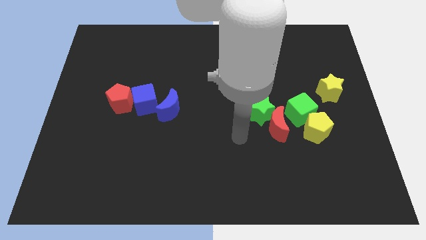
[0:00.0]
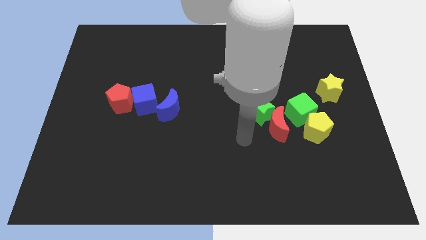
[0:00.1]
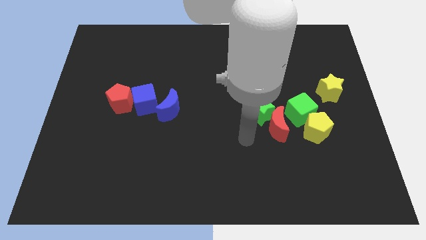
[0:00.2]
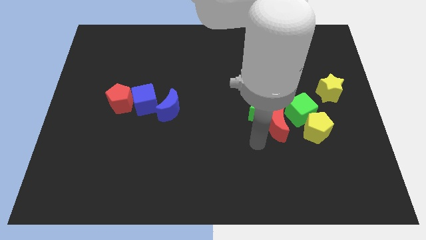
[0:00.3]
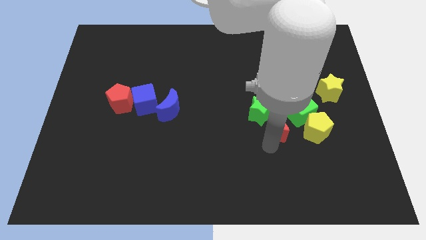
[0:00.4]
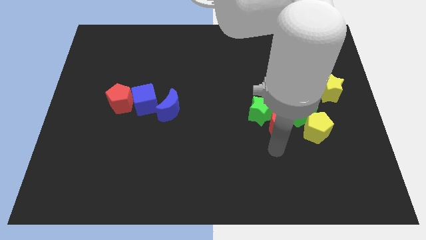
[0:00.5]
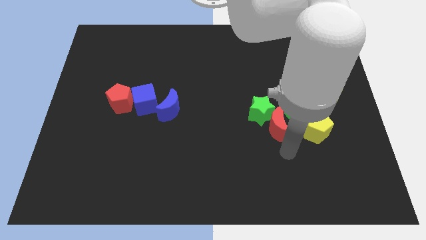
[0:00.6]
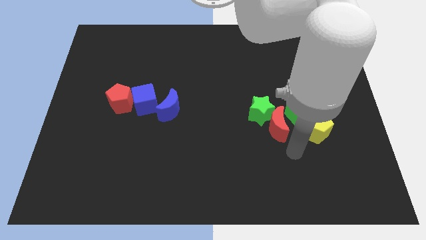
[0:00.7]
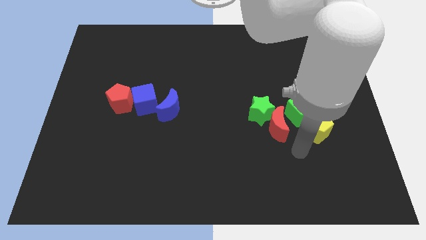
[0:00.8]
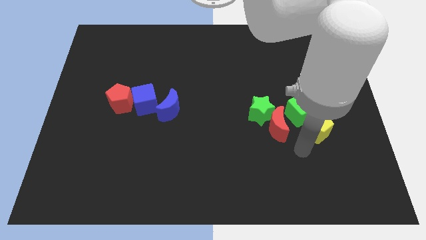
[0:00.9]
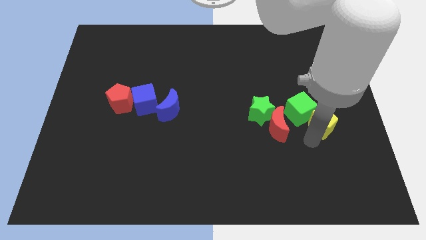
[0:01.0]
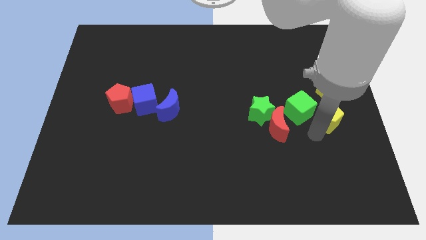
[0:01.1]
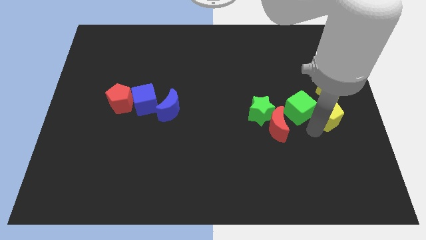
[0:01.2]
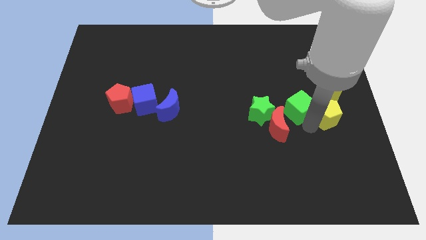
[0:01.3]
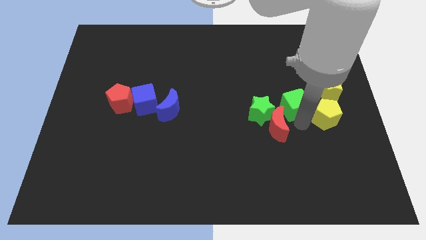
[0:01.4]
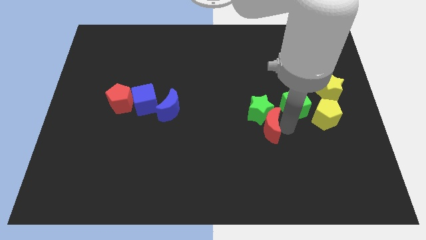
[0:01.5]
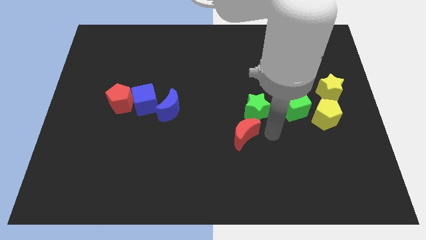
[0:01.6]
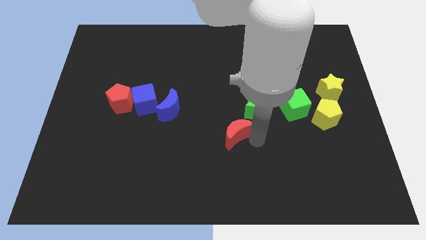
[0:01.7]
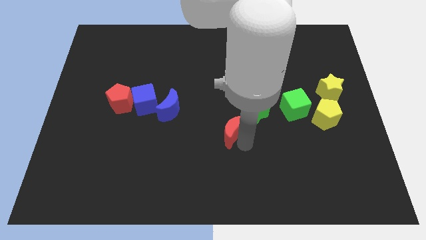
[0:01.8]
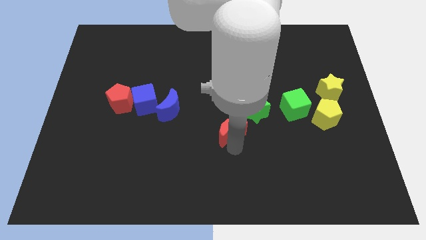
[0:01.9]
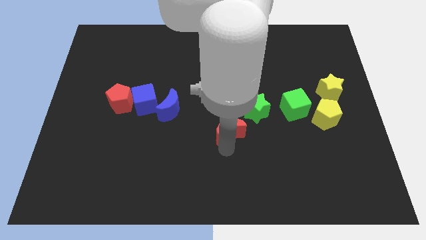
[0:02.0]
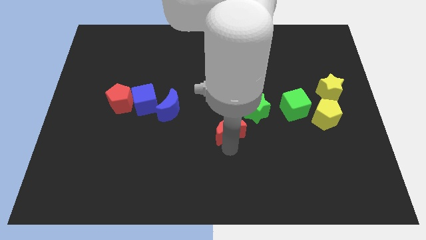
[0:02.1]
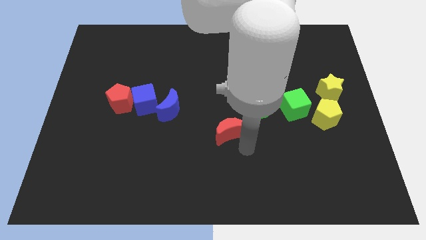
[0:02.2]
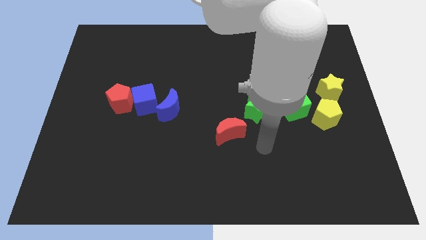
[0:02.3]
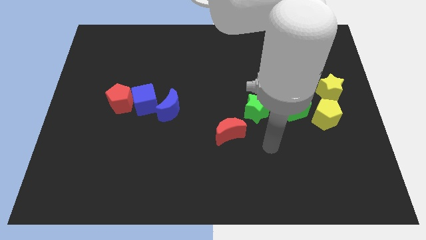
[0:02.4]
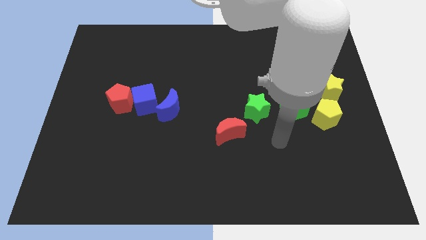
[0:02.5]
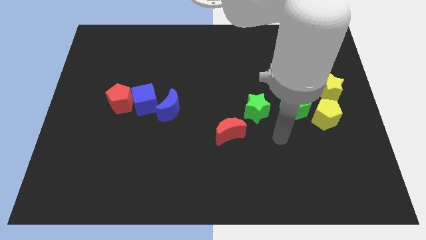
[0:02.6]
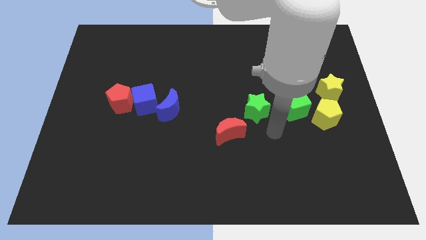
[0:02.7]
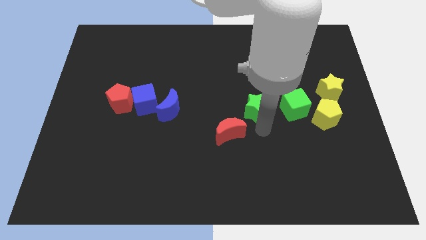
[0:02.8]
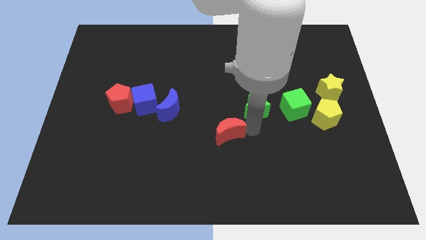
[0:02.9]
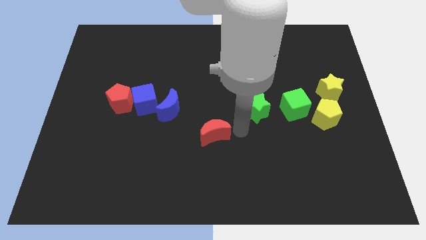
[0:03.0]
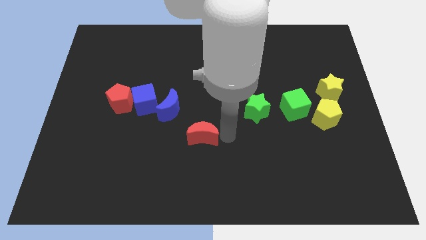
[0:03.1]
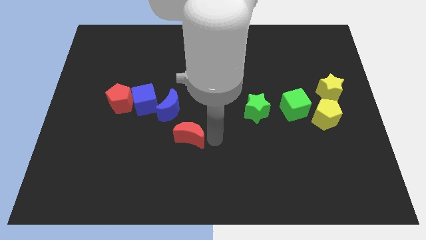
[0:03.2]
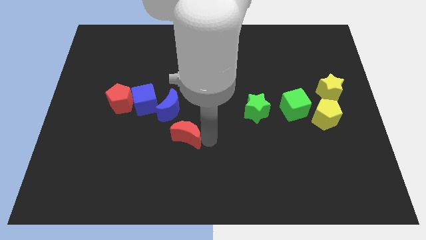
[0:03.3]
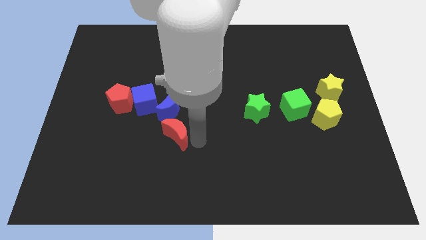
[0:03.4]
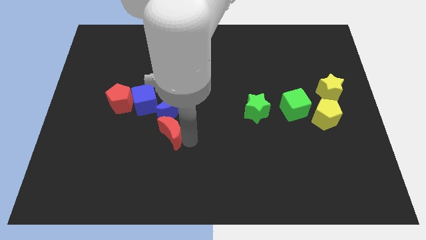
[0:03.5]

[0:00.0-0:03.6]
move red moon below the blue moon

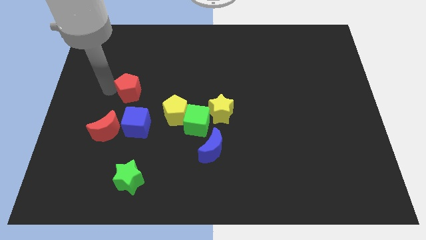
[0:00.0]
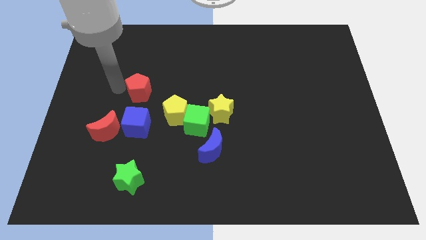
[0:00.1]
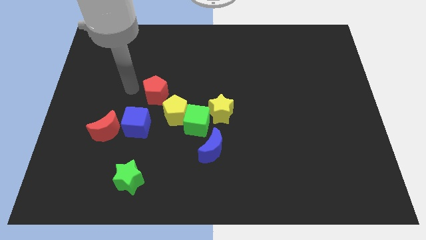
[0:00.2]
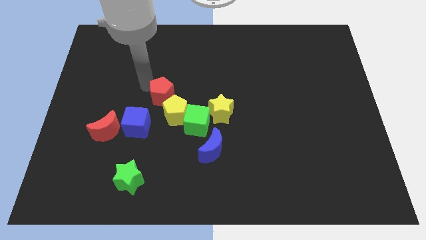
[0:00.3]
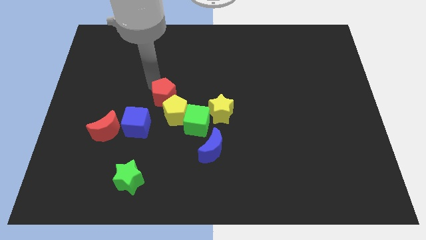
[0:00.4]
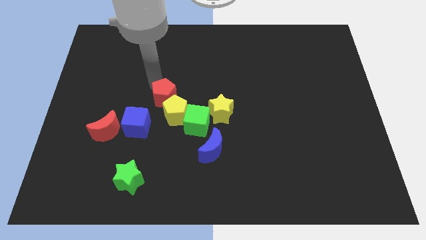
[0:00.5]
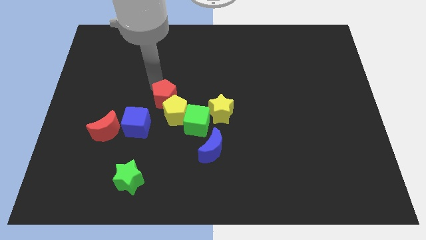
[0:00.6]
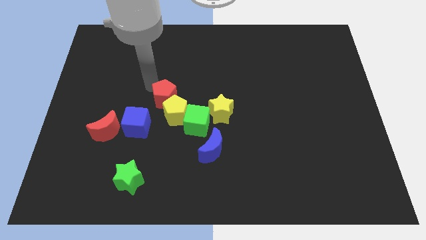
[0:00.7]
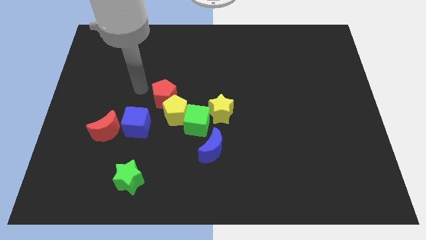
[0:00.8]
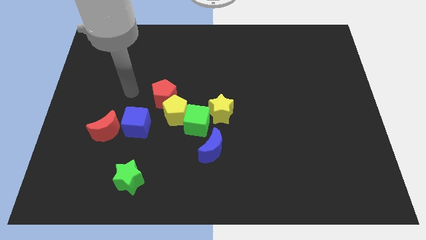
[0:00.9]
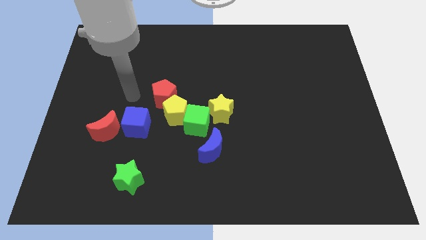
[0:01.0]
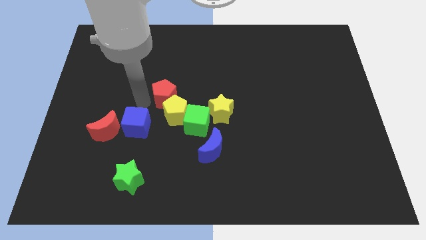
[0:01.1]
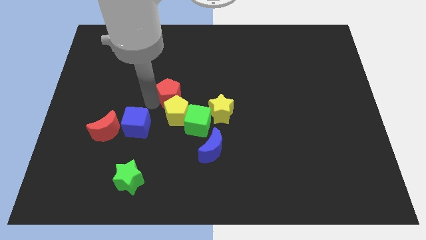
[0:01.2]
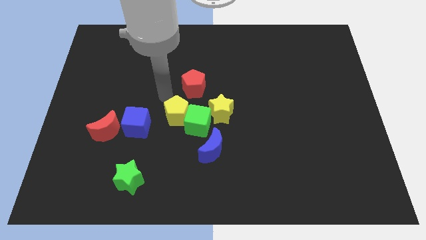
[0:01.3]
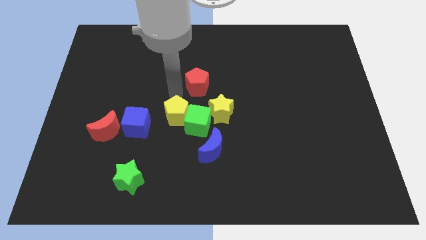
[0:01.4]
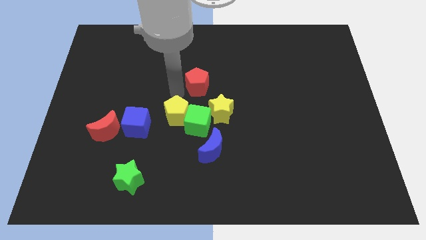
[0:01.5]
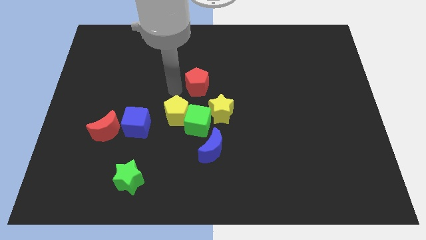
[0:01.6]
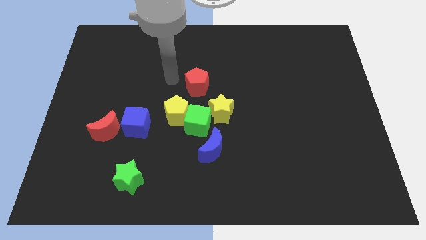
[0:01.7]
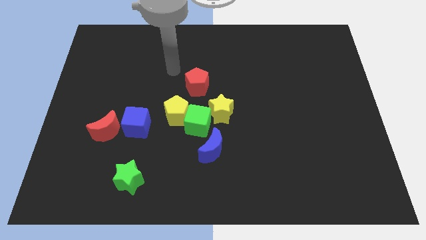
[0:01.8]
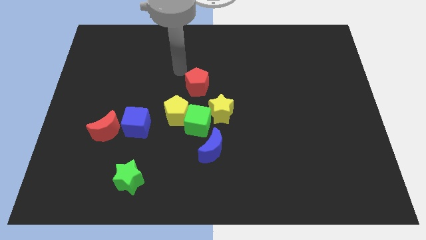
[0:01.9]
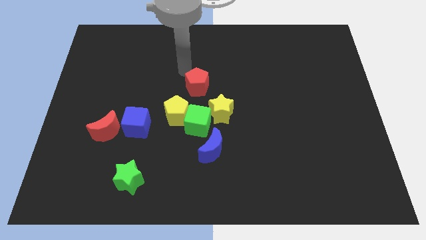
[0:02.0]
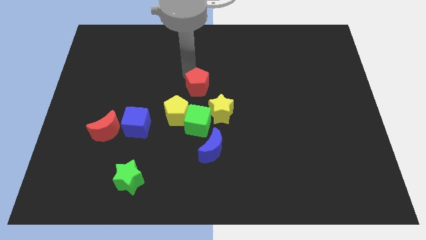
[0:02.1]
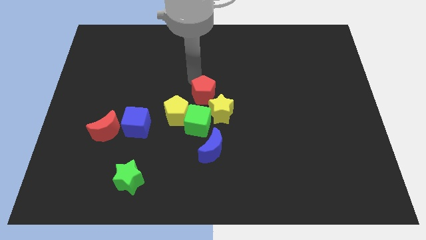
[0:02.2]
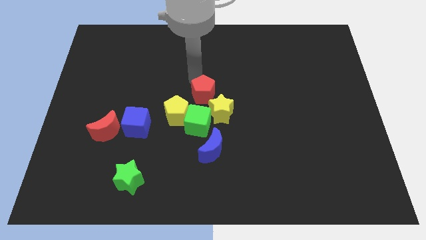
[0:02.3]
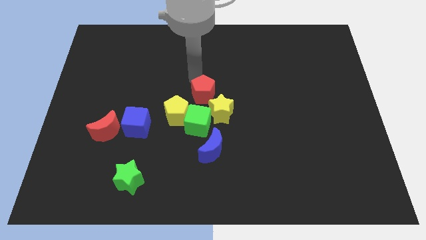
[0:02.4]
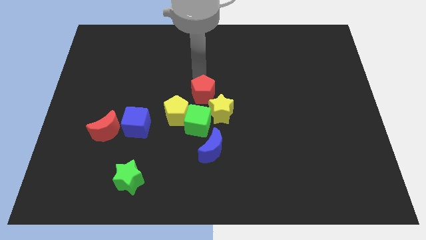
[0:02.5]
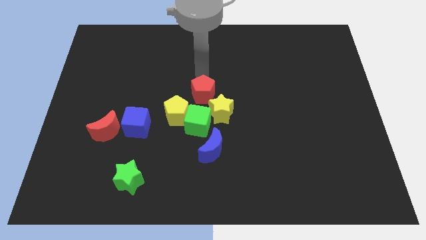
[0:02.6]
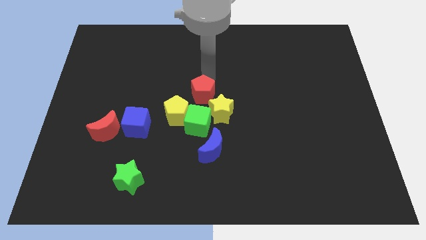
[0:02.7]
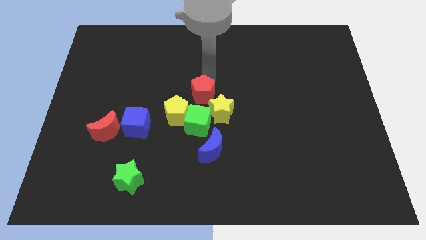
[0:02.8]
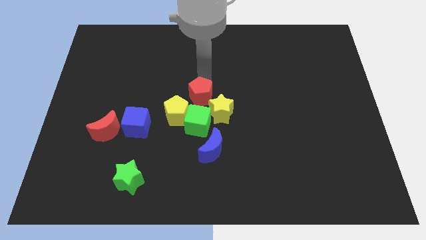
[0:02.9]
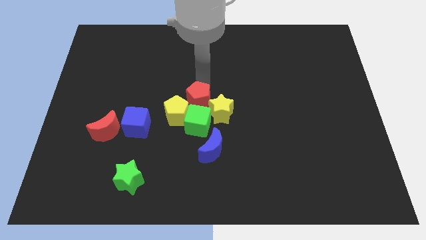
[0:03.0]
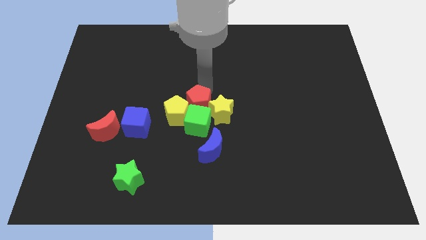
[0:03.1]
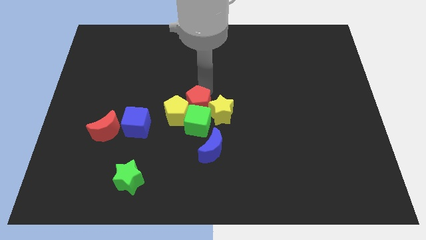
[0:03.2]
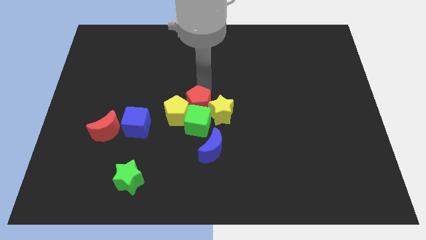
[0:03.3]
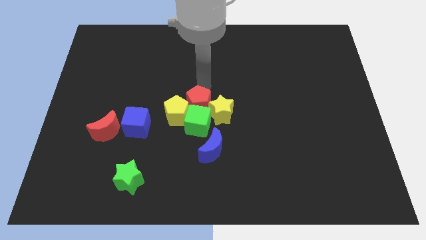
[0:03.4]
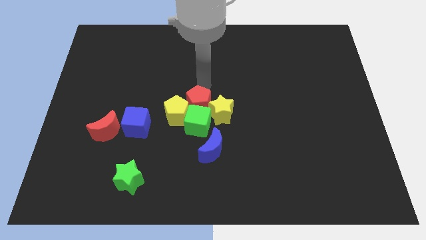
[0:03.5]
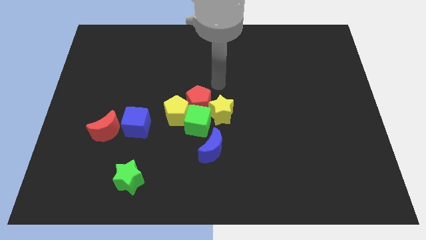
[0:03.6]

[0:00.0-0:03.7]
move the red pentagon at the top of the green cube

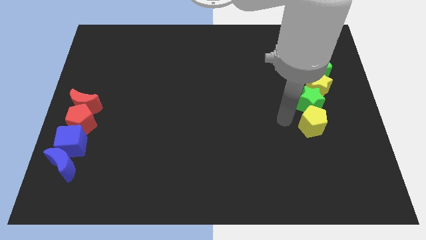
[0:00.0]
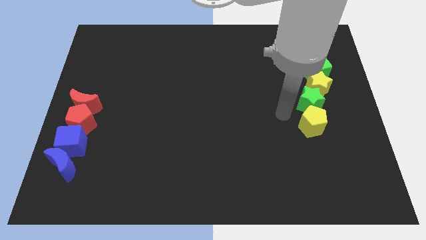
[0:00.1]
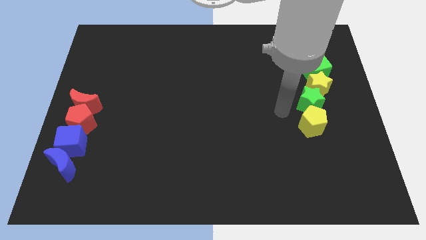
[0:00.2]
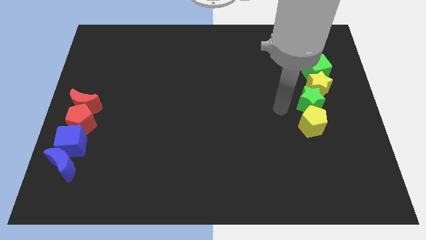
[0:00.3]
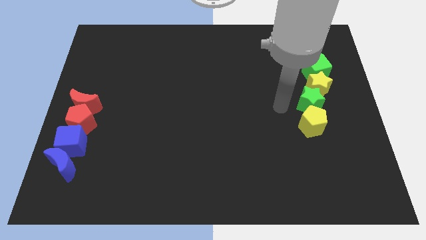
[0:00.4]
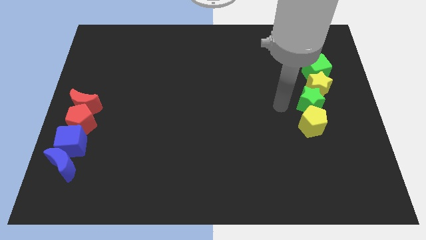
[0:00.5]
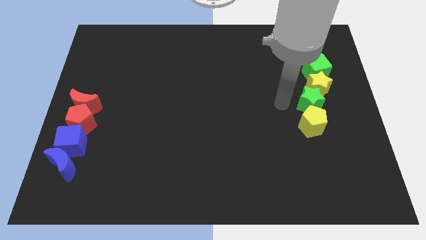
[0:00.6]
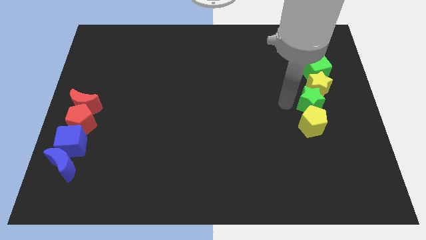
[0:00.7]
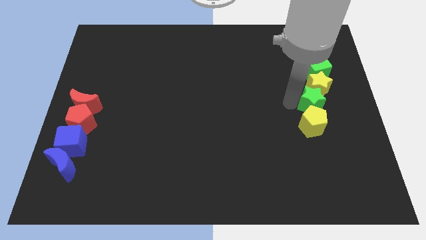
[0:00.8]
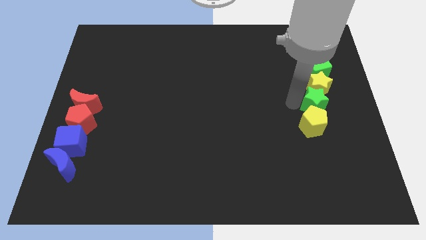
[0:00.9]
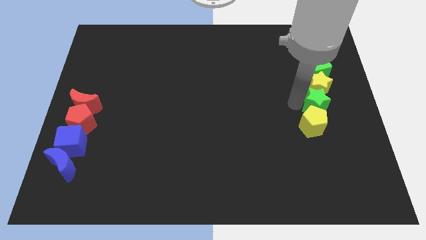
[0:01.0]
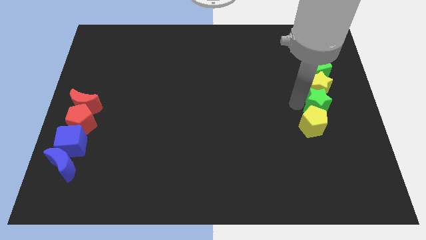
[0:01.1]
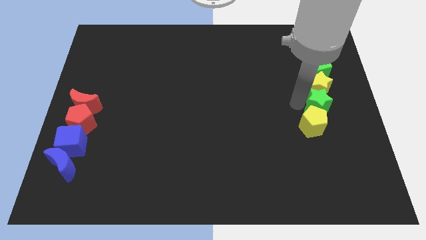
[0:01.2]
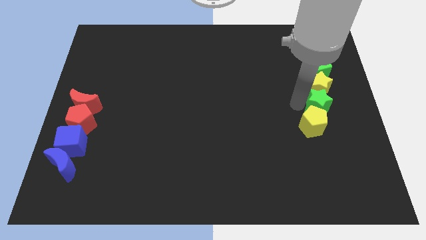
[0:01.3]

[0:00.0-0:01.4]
adjust the green star below the yellow star

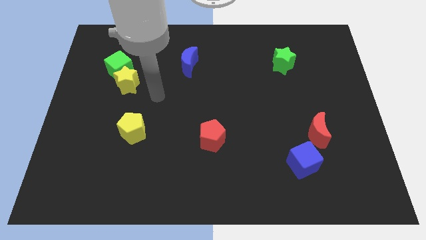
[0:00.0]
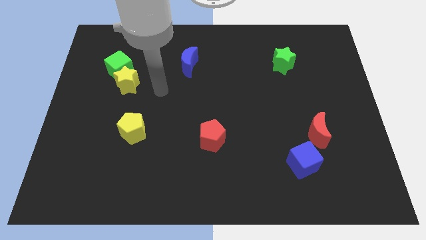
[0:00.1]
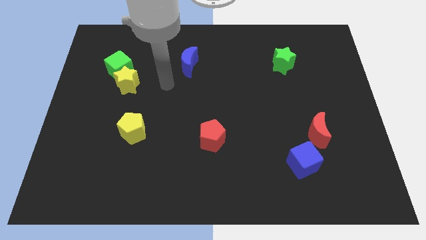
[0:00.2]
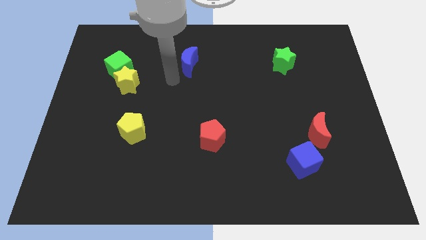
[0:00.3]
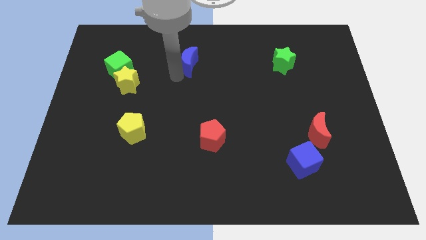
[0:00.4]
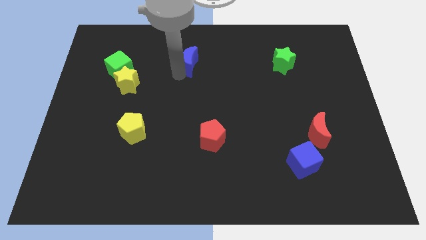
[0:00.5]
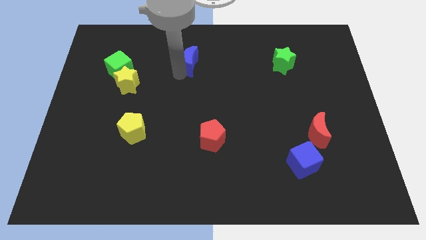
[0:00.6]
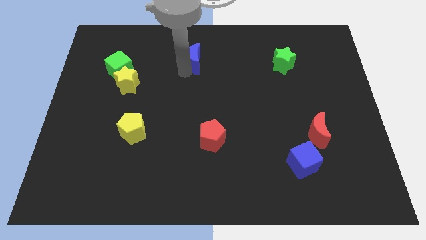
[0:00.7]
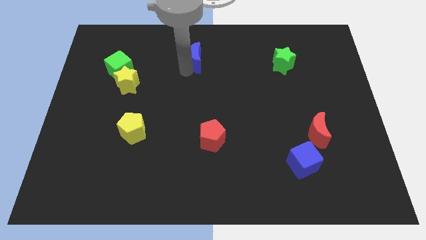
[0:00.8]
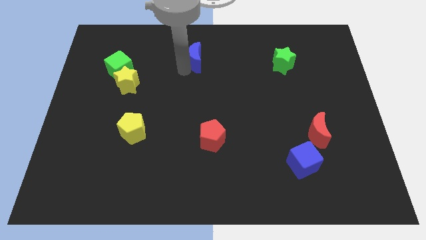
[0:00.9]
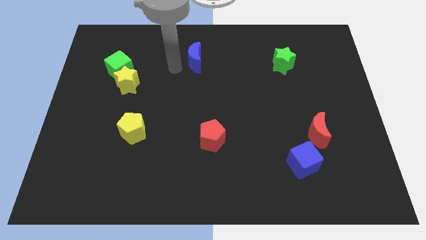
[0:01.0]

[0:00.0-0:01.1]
move arm near blue crescent
